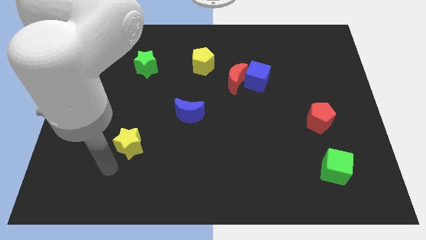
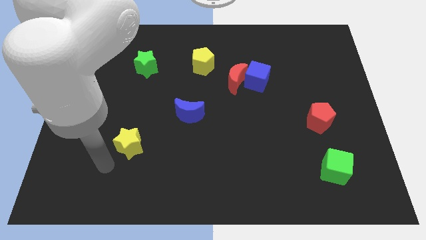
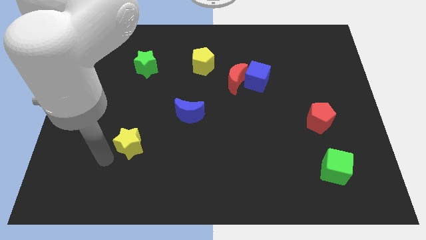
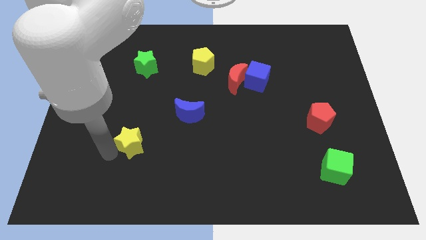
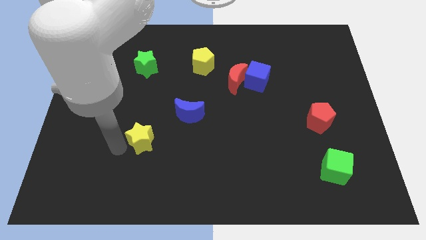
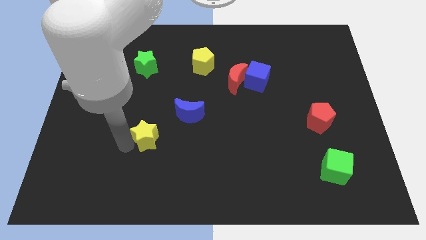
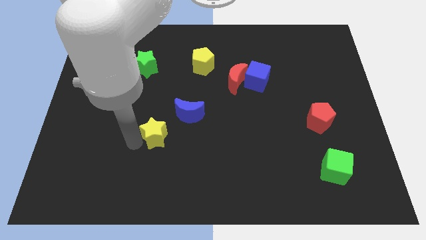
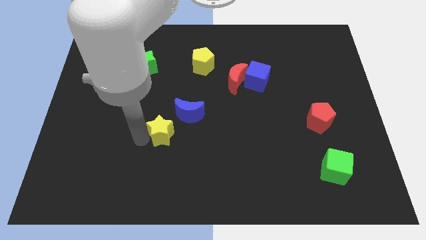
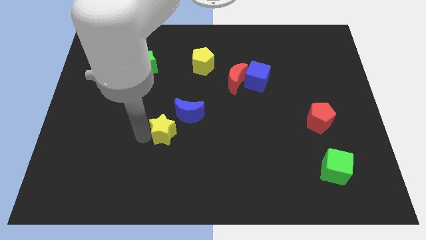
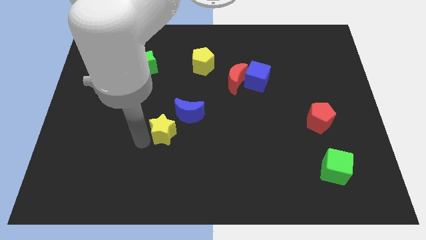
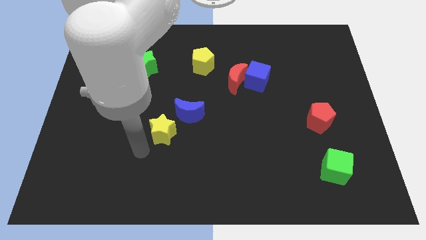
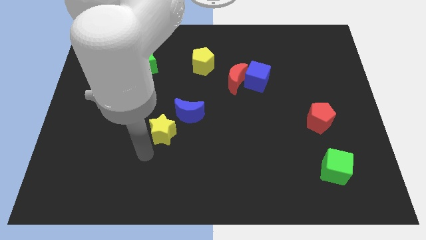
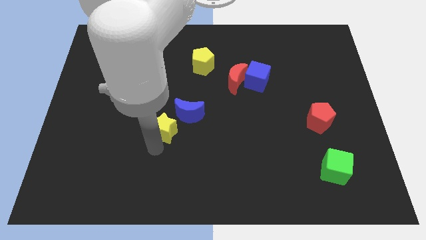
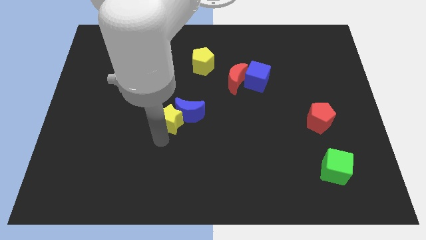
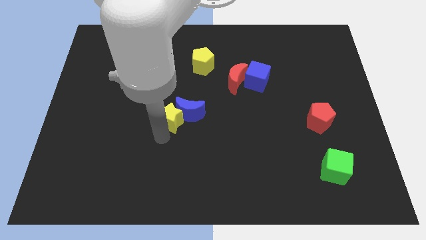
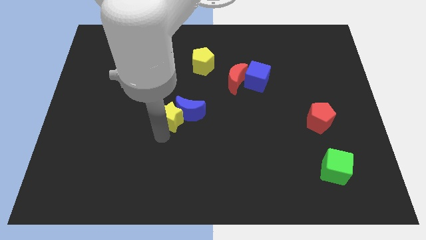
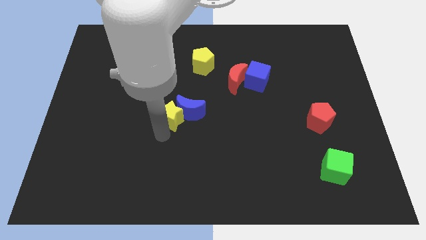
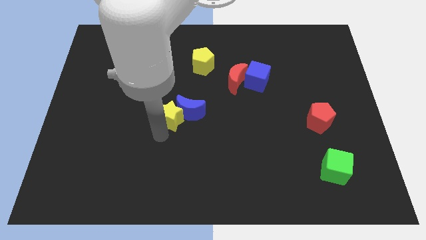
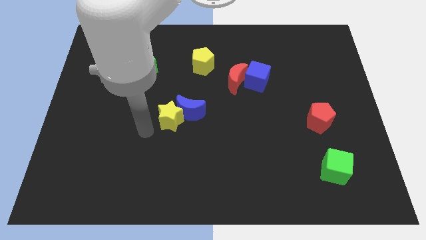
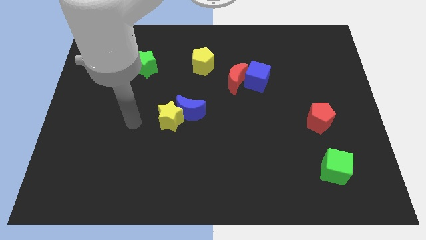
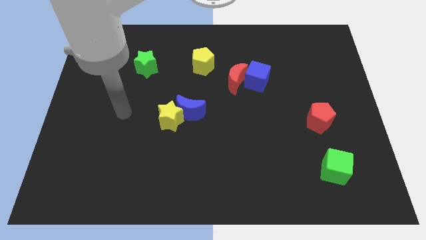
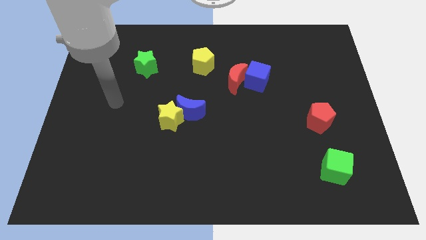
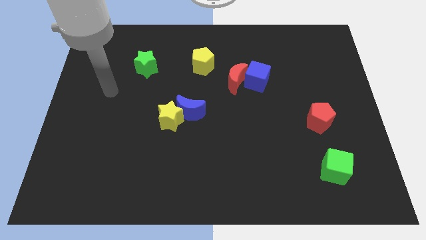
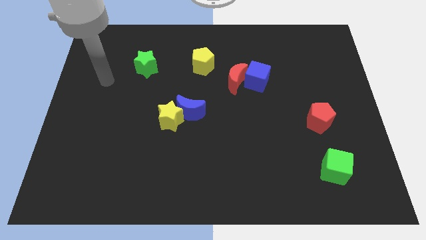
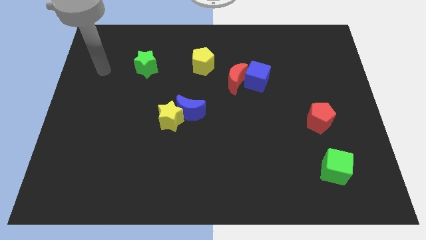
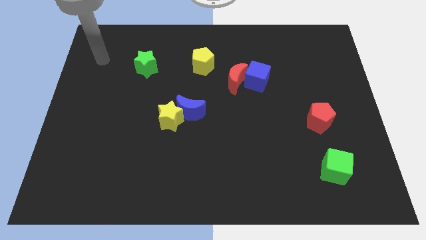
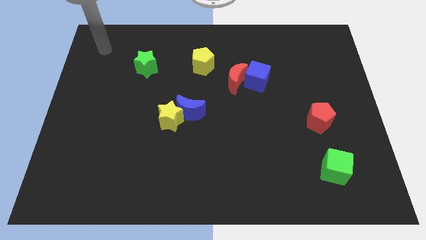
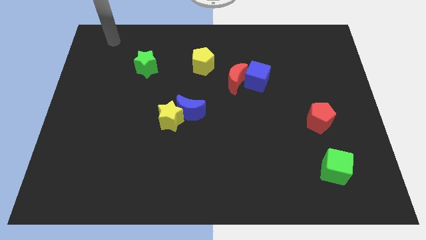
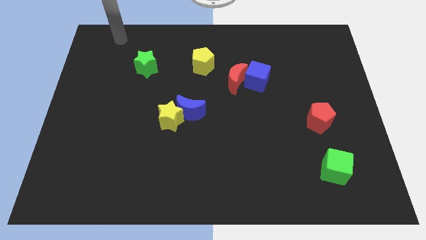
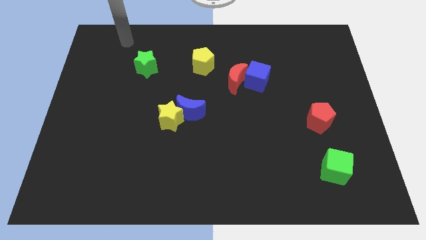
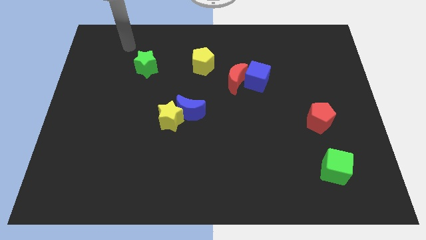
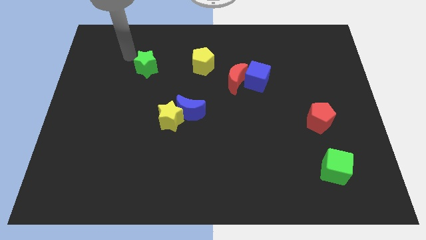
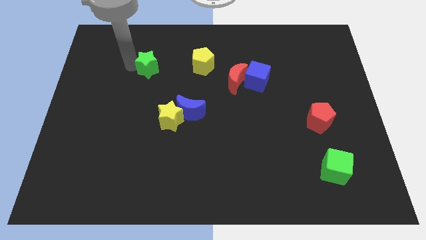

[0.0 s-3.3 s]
push the yellow star into the blue moon

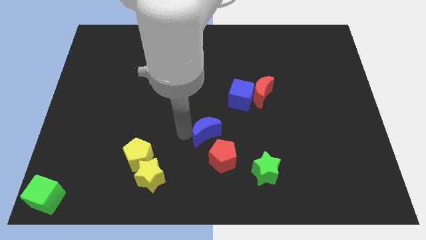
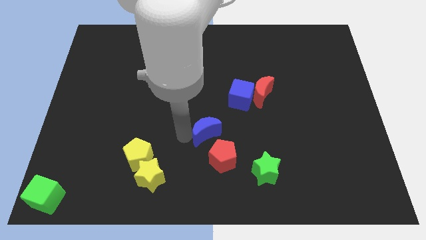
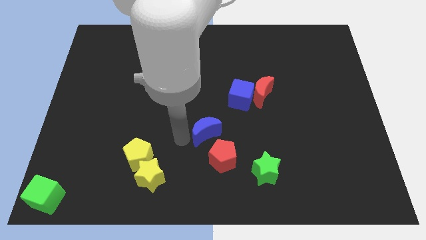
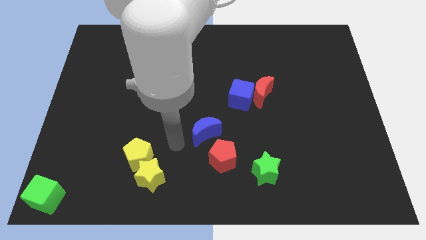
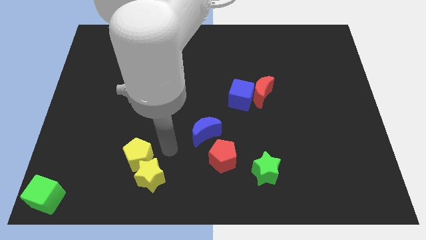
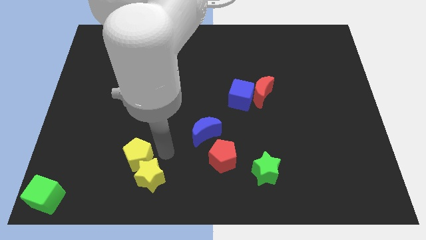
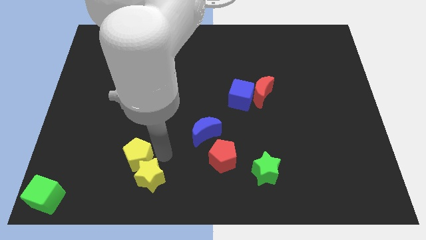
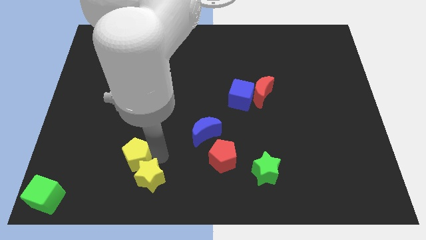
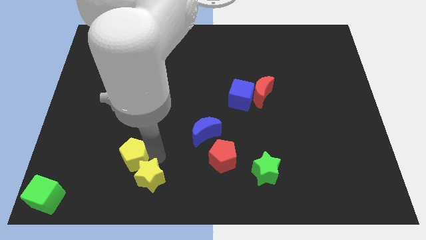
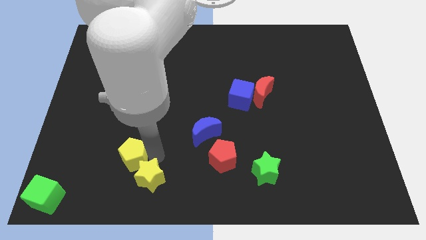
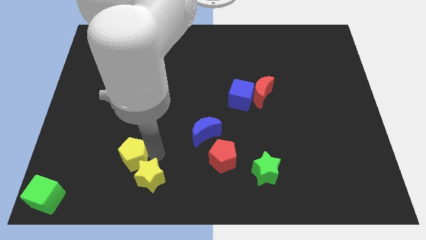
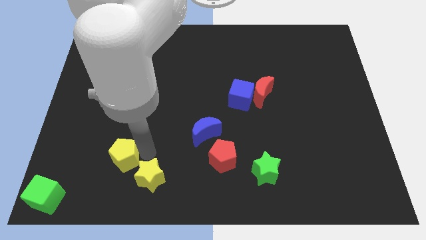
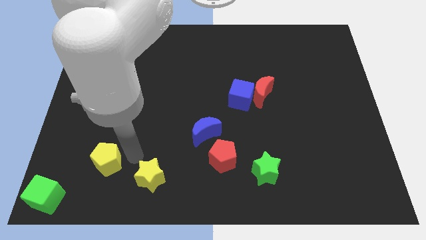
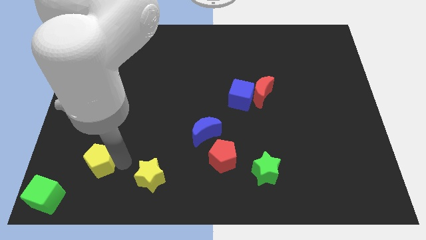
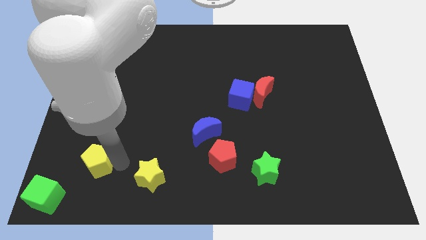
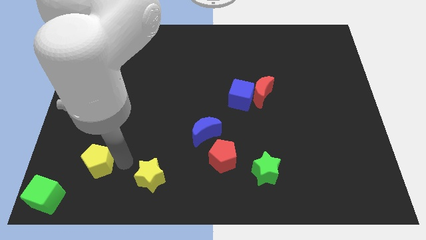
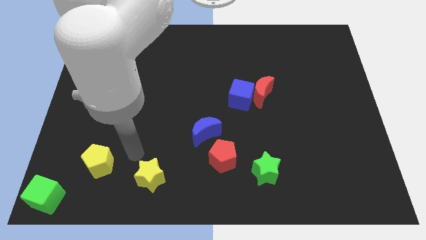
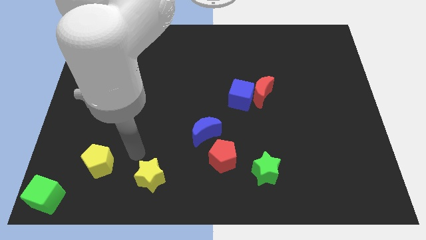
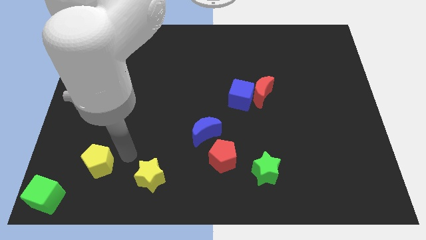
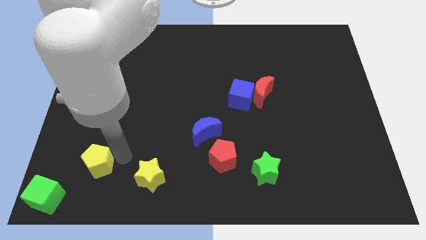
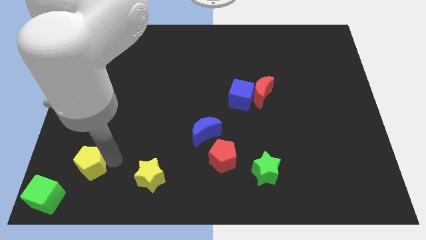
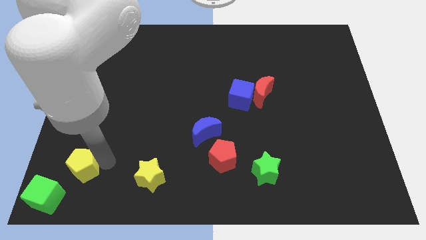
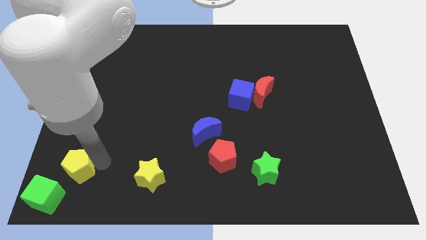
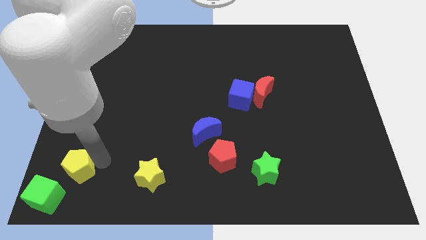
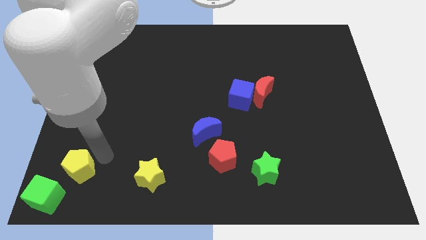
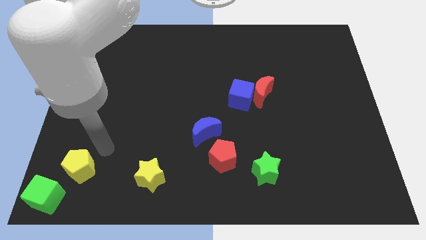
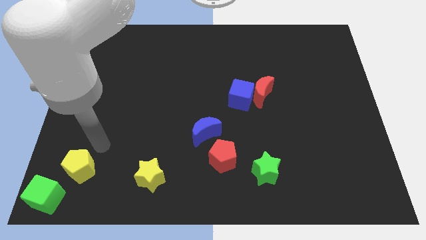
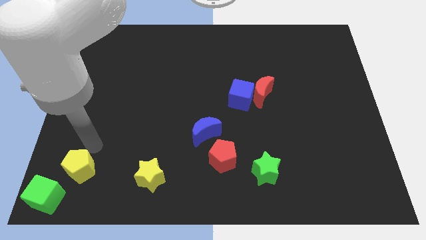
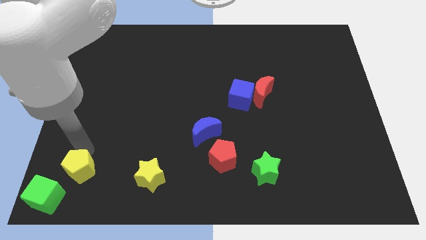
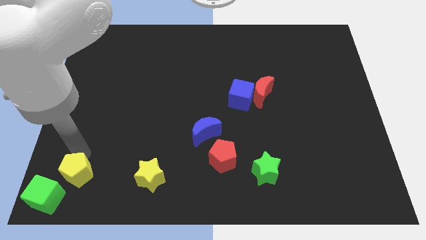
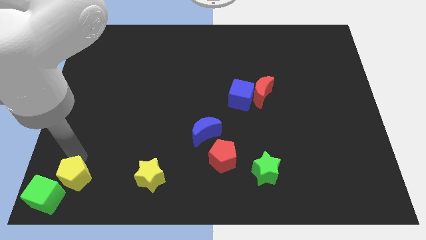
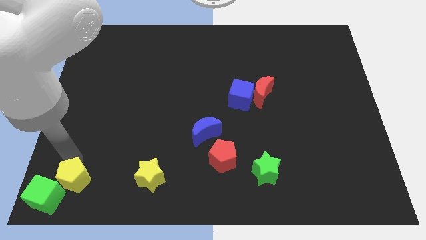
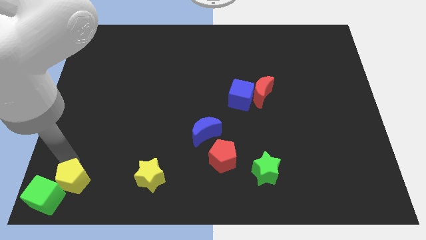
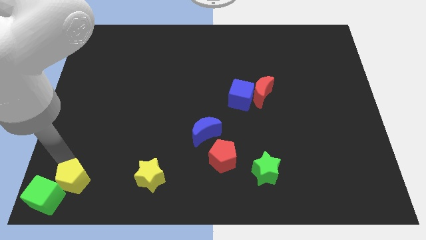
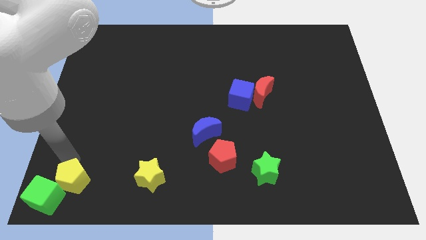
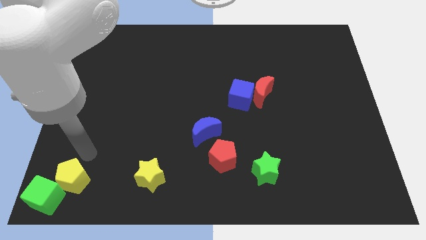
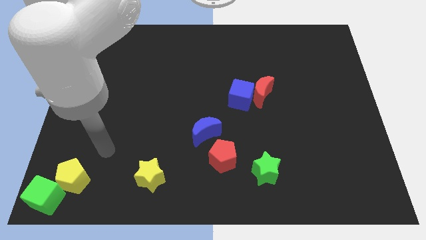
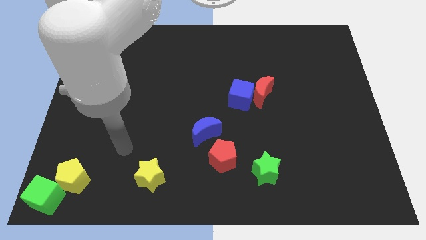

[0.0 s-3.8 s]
push the yellow pentagon slightly to the green cube

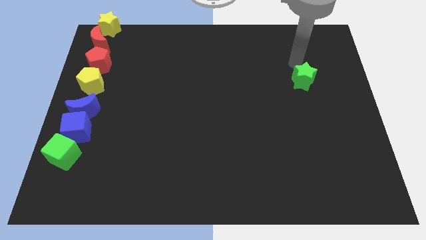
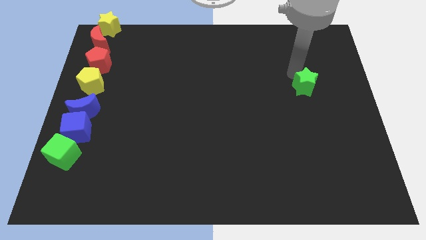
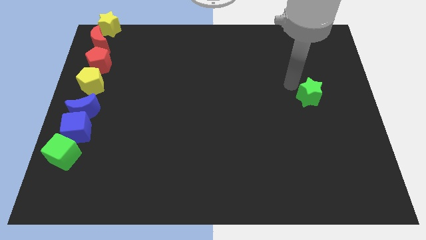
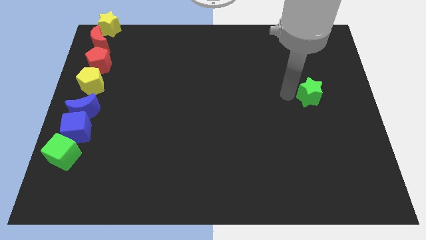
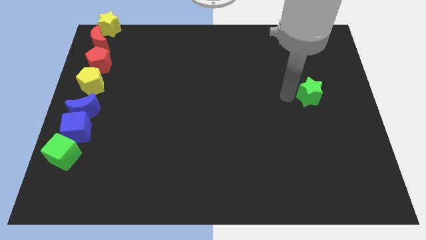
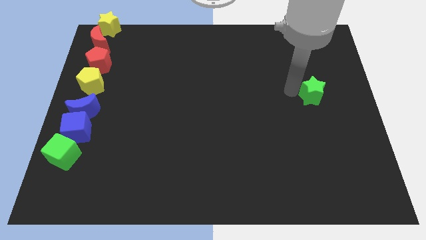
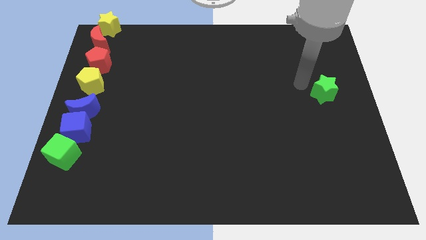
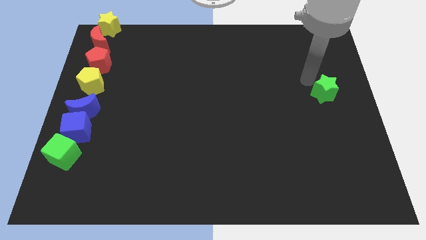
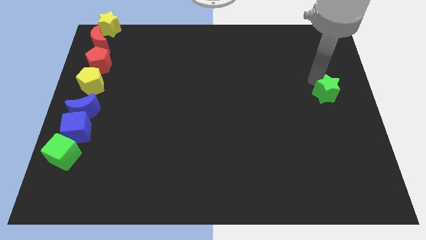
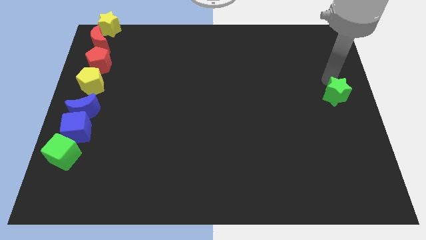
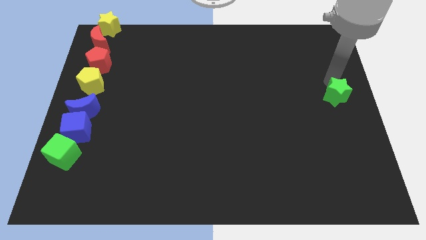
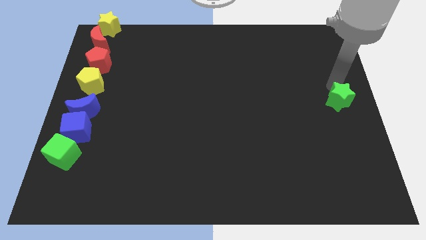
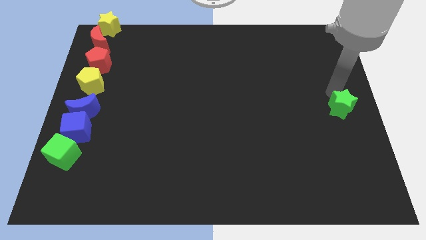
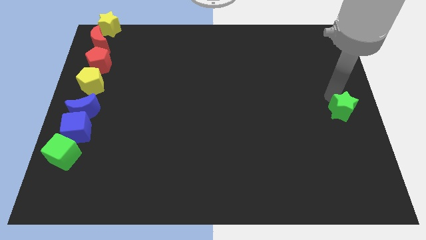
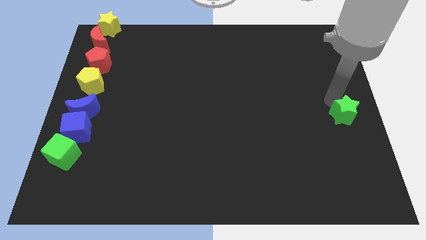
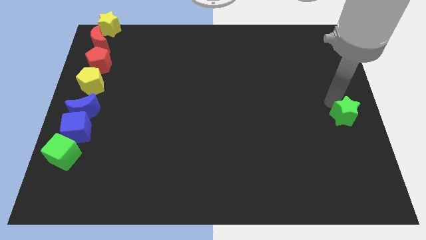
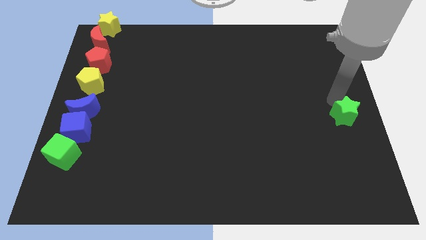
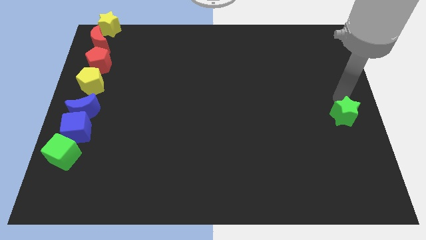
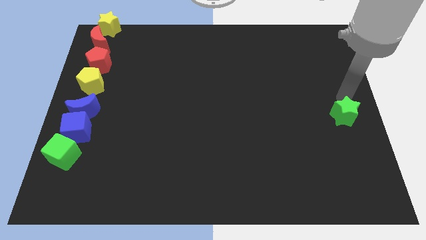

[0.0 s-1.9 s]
push green star slightly downwards
